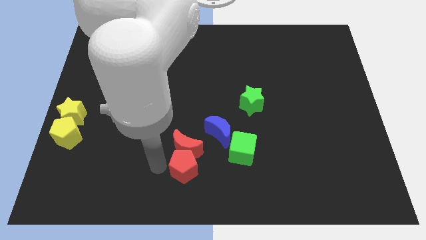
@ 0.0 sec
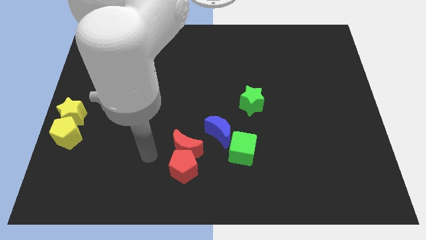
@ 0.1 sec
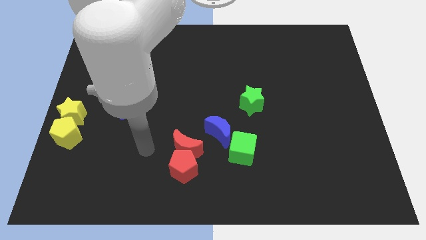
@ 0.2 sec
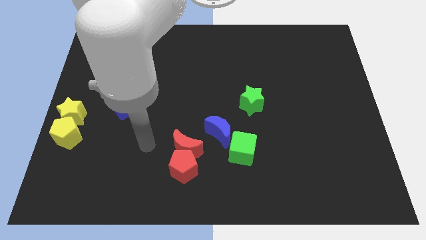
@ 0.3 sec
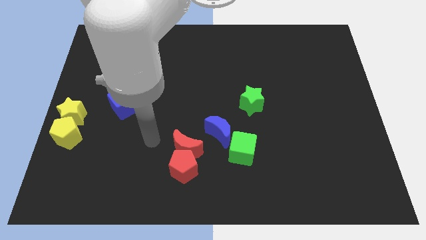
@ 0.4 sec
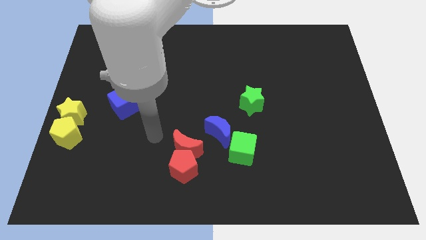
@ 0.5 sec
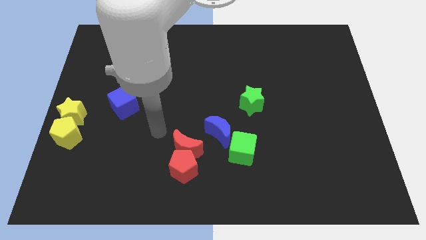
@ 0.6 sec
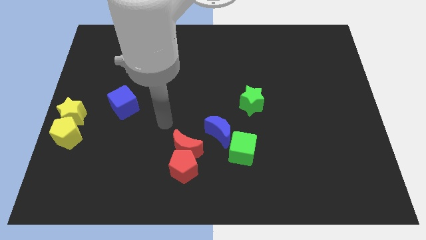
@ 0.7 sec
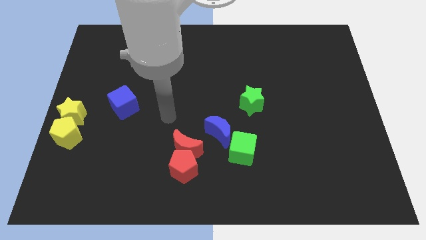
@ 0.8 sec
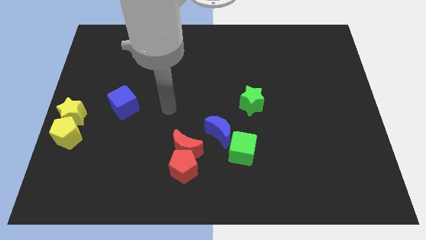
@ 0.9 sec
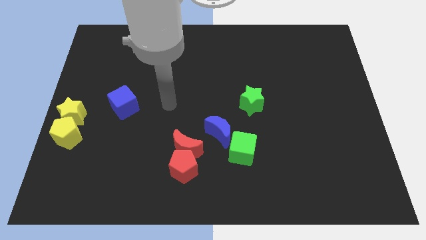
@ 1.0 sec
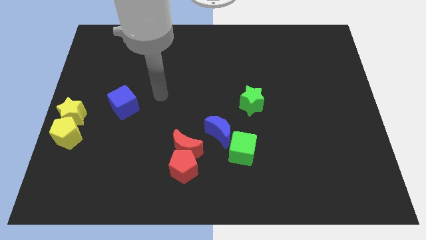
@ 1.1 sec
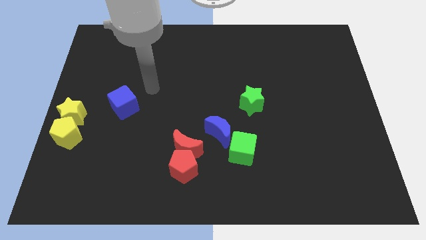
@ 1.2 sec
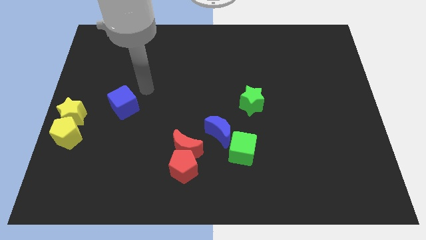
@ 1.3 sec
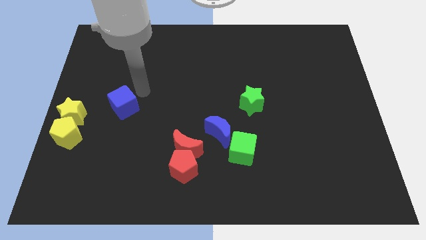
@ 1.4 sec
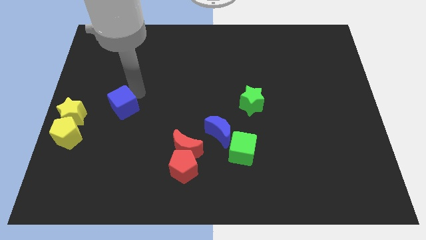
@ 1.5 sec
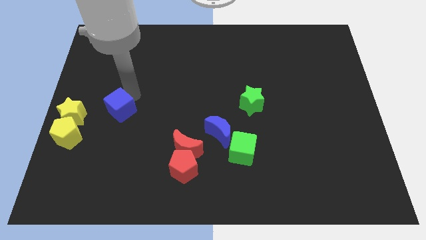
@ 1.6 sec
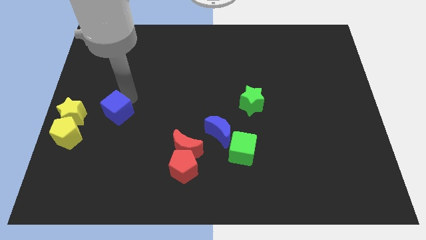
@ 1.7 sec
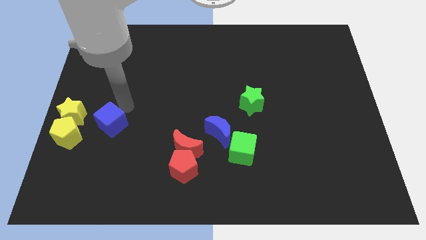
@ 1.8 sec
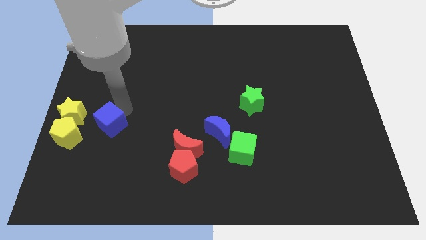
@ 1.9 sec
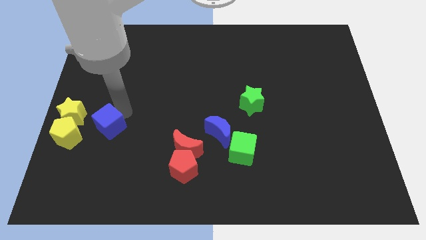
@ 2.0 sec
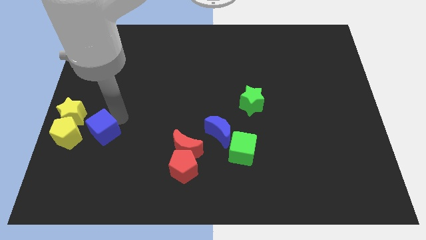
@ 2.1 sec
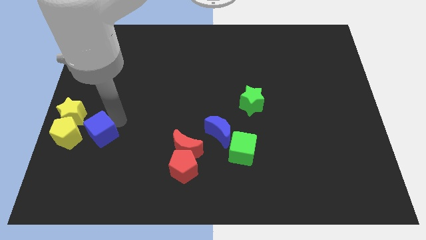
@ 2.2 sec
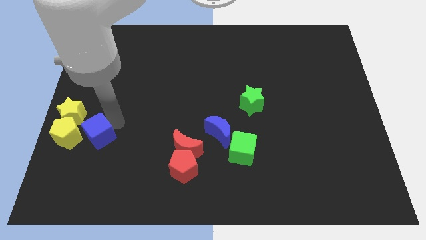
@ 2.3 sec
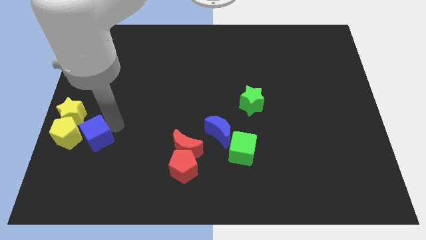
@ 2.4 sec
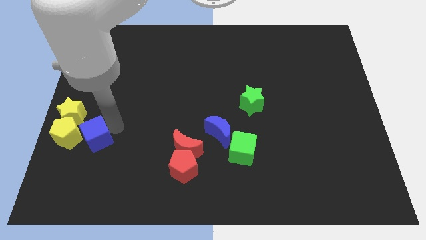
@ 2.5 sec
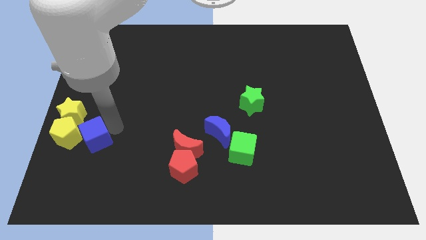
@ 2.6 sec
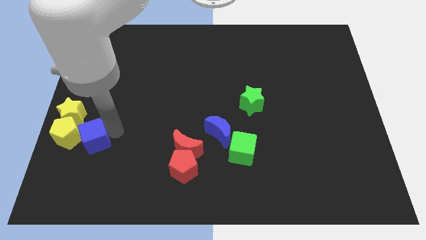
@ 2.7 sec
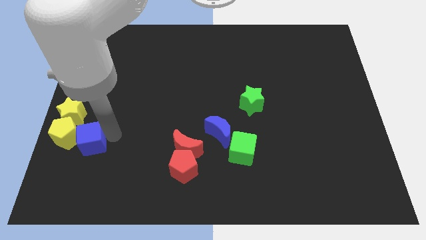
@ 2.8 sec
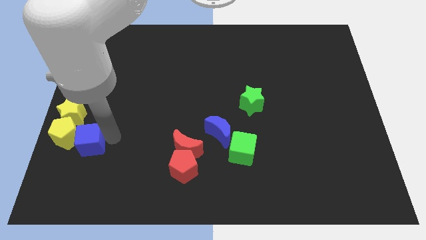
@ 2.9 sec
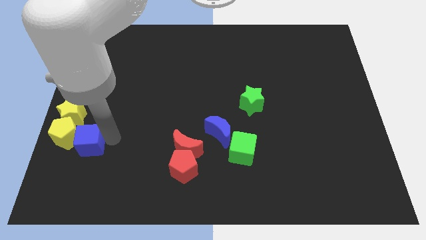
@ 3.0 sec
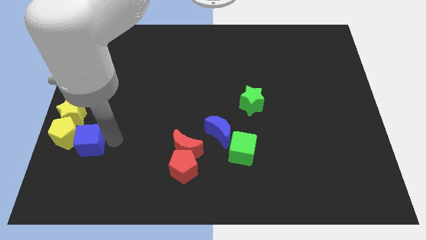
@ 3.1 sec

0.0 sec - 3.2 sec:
push the blue cube to the right of the yellow pentagon

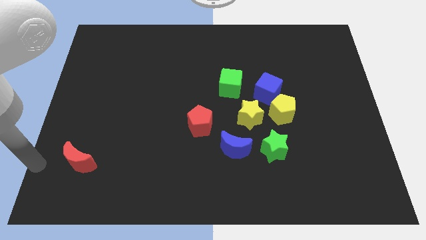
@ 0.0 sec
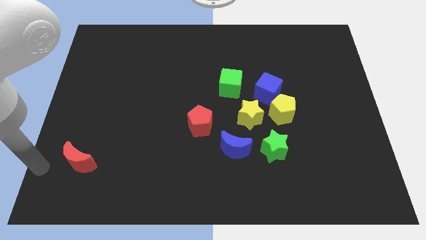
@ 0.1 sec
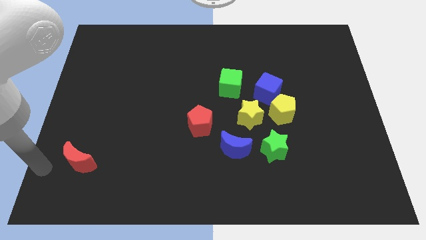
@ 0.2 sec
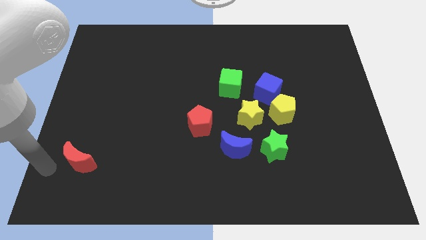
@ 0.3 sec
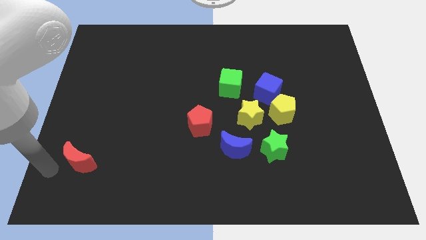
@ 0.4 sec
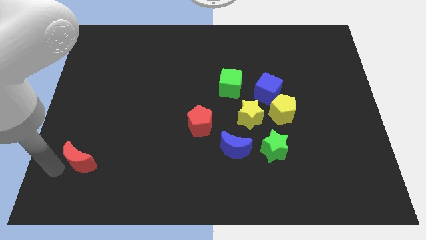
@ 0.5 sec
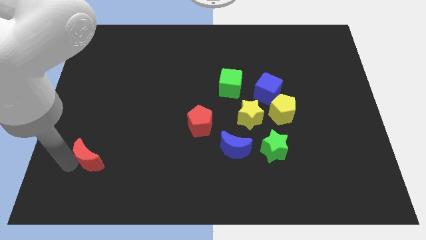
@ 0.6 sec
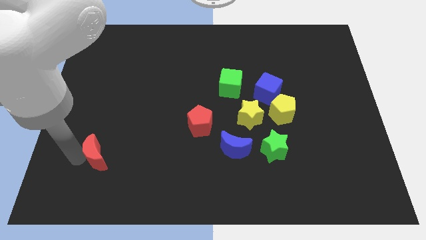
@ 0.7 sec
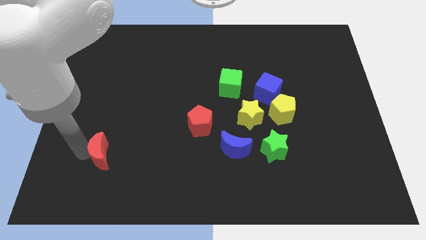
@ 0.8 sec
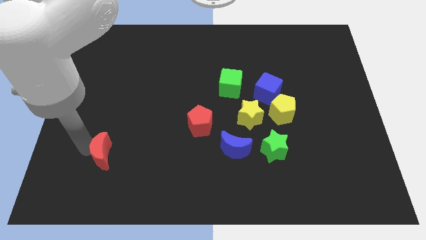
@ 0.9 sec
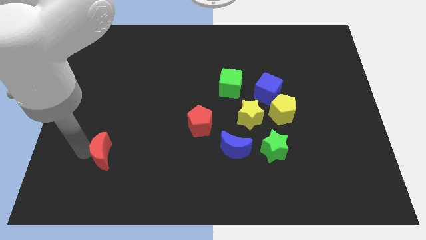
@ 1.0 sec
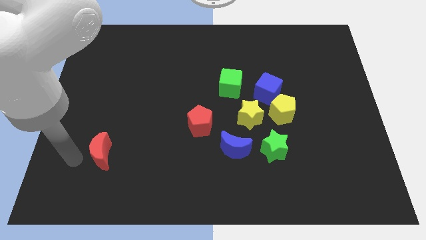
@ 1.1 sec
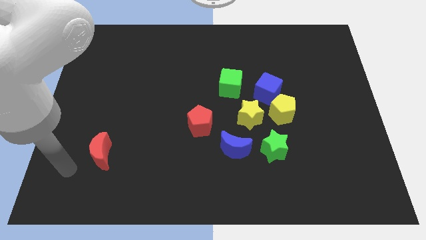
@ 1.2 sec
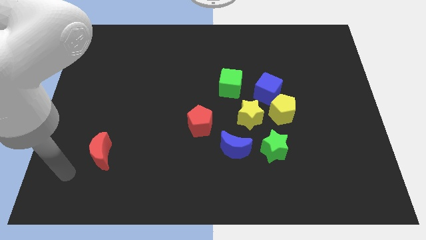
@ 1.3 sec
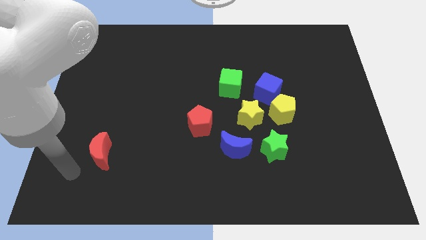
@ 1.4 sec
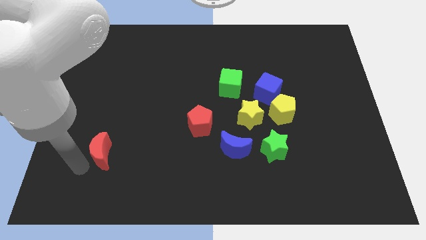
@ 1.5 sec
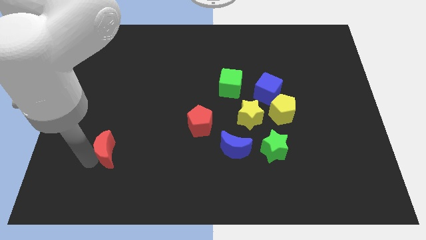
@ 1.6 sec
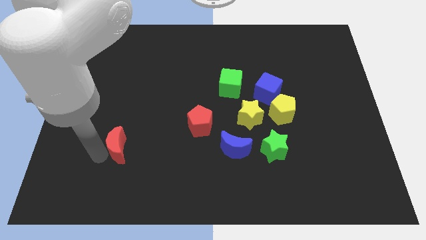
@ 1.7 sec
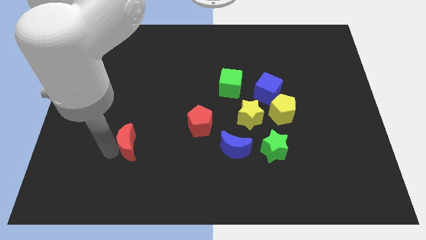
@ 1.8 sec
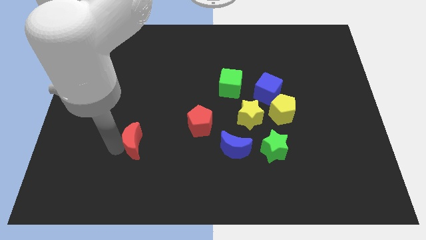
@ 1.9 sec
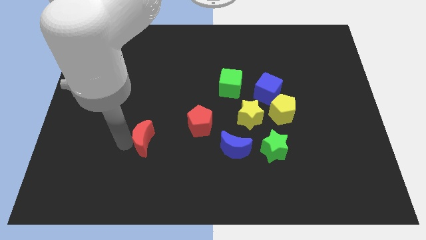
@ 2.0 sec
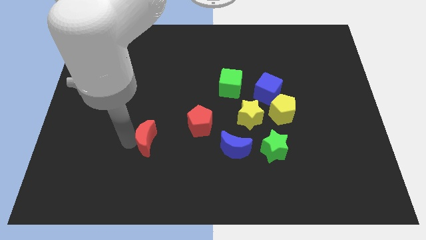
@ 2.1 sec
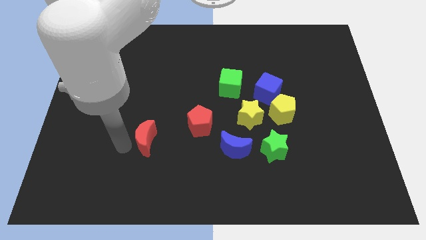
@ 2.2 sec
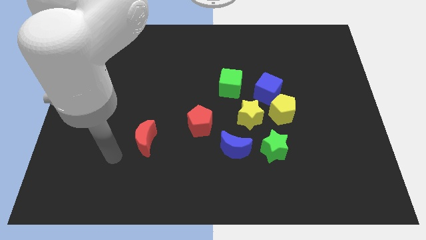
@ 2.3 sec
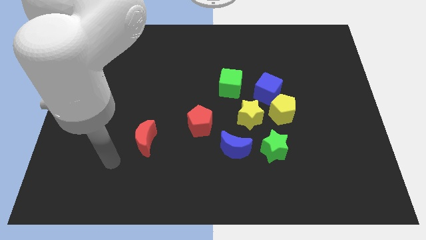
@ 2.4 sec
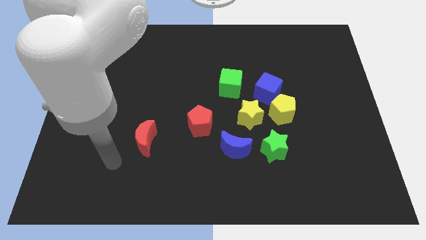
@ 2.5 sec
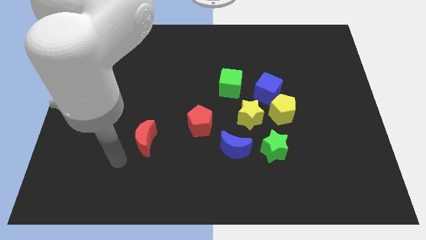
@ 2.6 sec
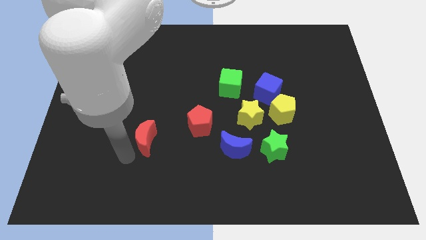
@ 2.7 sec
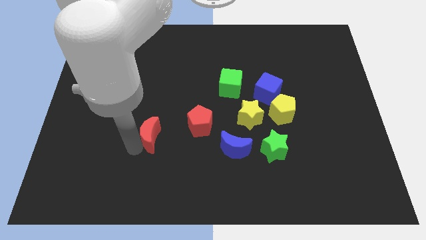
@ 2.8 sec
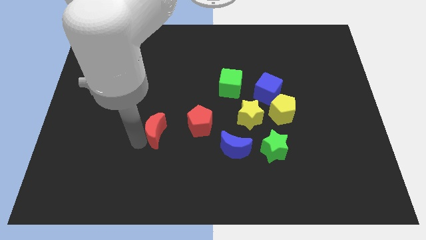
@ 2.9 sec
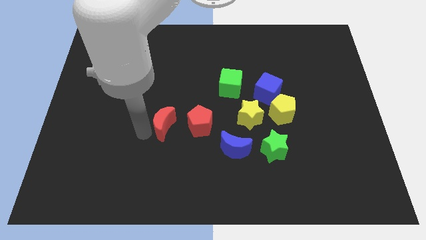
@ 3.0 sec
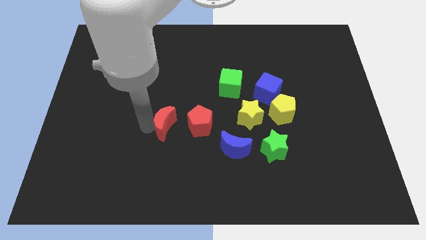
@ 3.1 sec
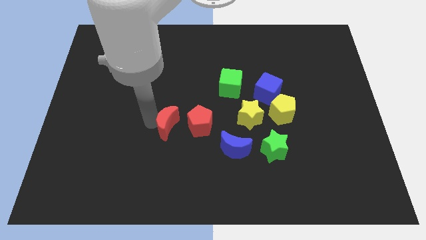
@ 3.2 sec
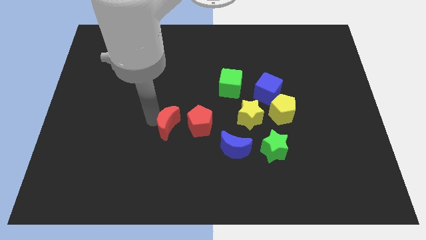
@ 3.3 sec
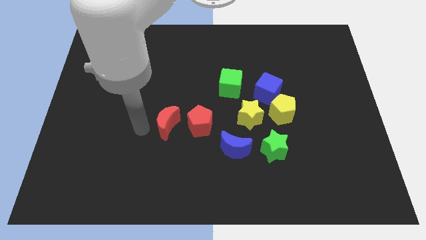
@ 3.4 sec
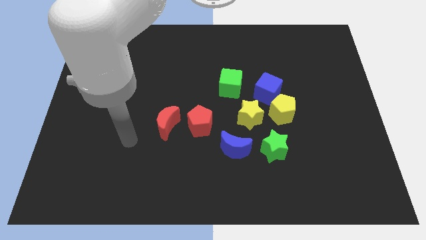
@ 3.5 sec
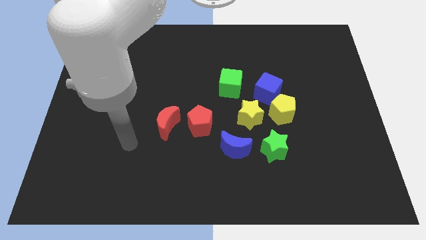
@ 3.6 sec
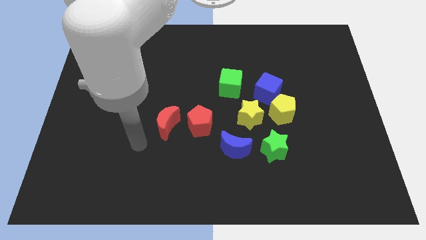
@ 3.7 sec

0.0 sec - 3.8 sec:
push red moon beside red pentagon

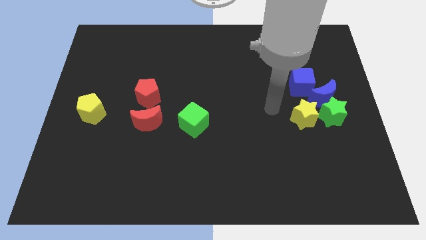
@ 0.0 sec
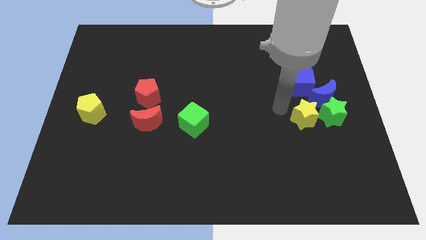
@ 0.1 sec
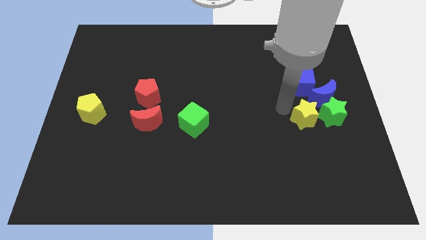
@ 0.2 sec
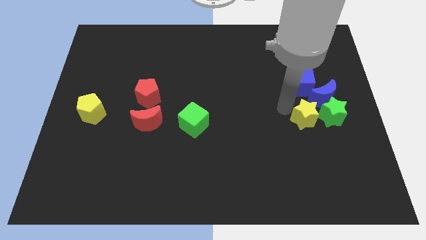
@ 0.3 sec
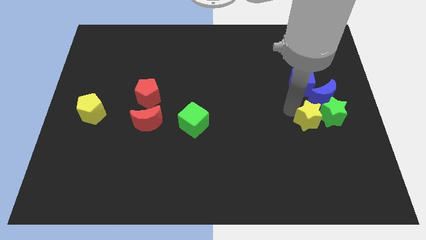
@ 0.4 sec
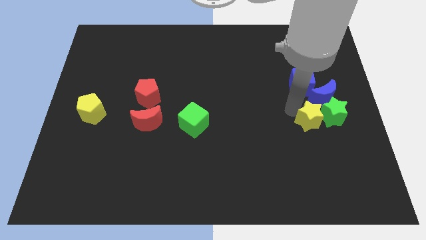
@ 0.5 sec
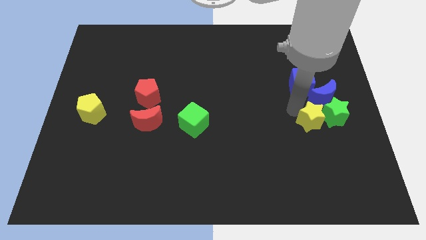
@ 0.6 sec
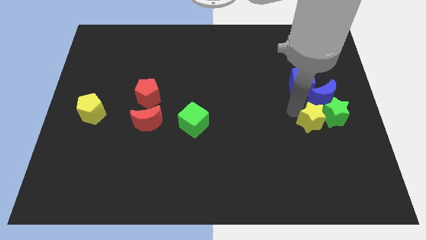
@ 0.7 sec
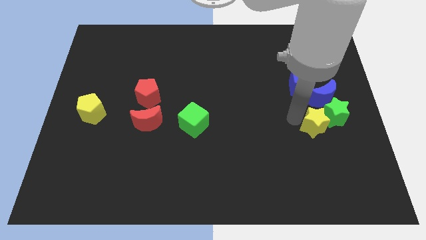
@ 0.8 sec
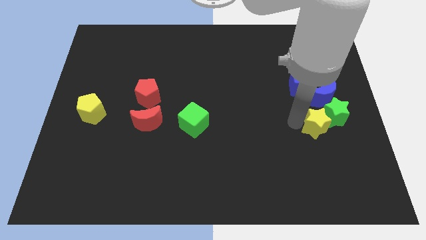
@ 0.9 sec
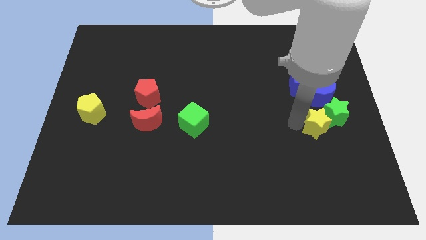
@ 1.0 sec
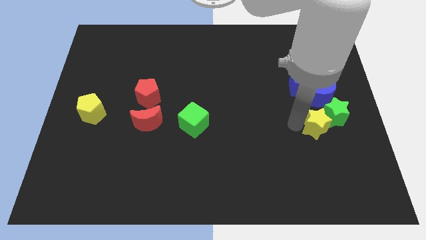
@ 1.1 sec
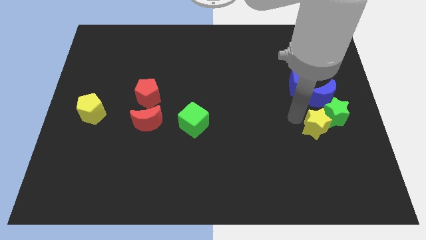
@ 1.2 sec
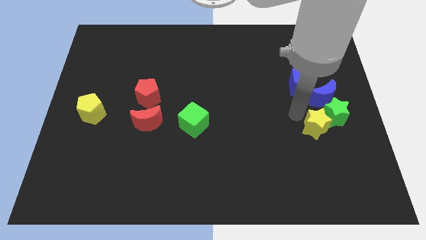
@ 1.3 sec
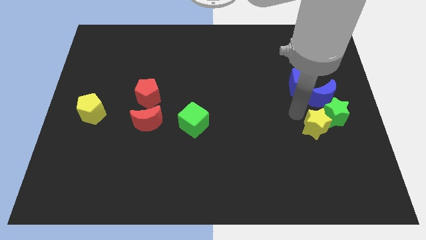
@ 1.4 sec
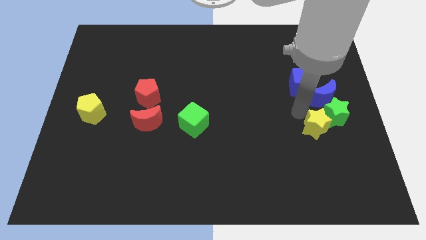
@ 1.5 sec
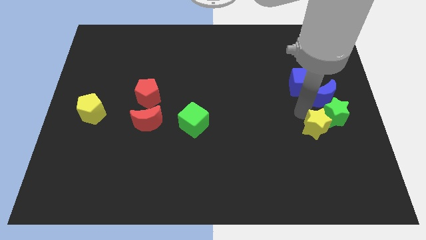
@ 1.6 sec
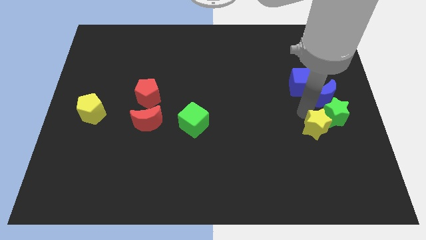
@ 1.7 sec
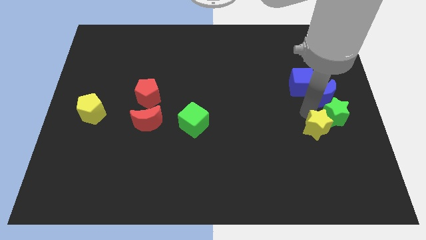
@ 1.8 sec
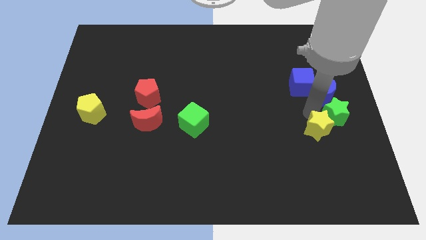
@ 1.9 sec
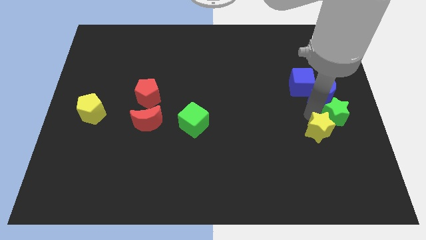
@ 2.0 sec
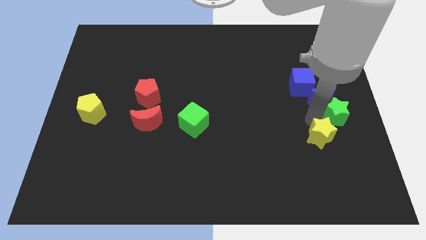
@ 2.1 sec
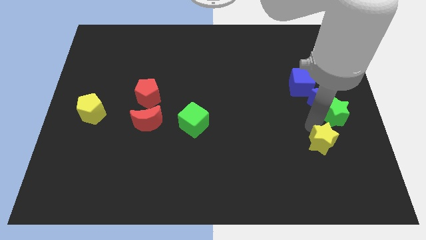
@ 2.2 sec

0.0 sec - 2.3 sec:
place the yellow star diagonally to the green star
